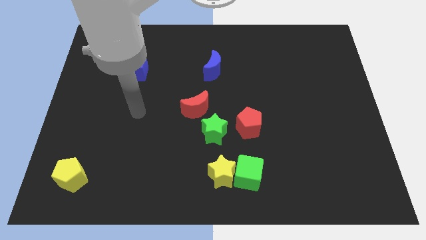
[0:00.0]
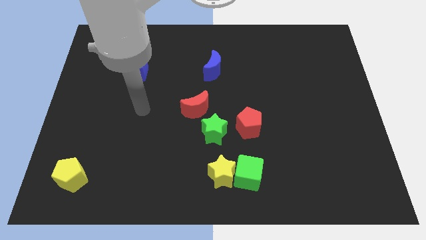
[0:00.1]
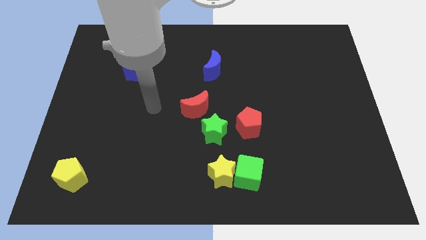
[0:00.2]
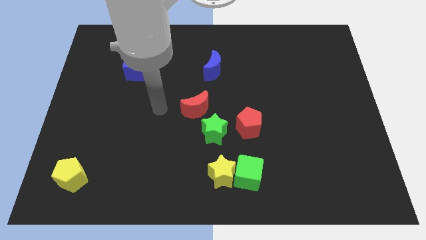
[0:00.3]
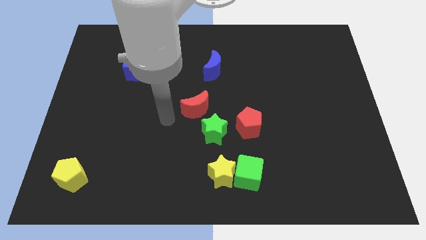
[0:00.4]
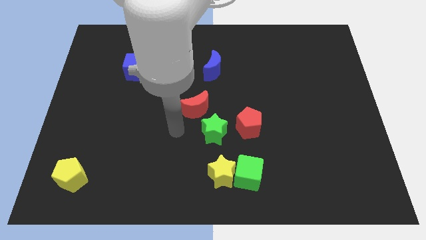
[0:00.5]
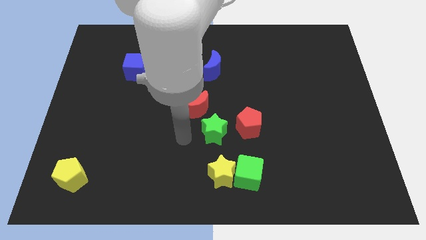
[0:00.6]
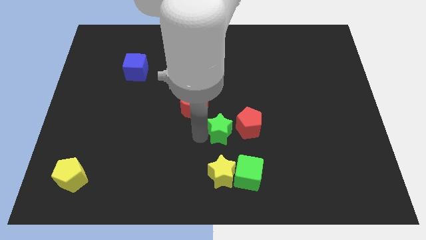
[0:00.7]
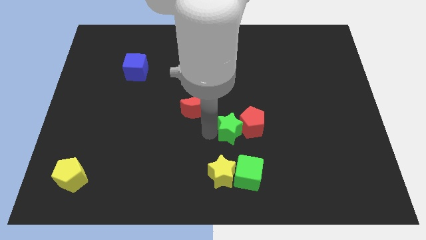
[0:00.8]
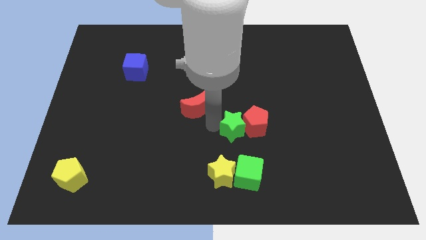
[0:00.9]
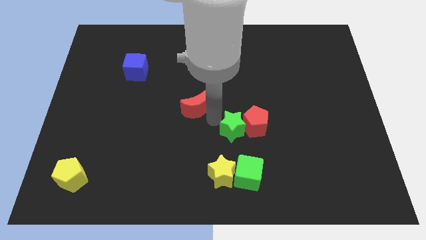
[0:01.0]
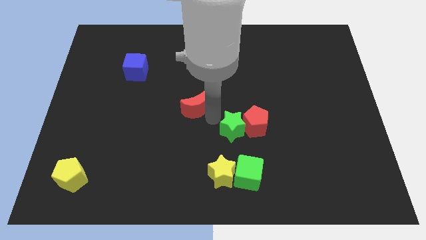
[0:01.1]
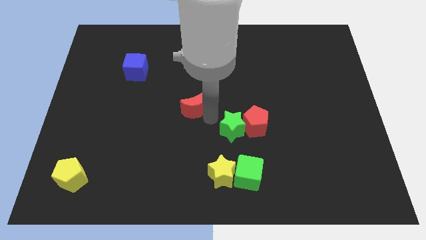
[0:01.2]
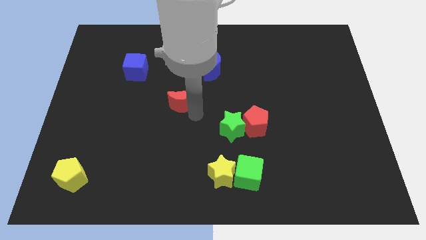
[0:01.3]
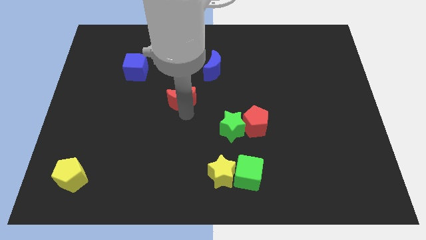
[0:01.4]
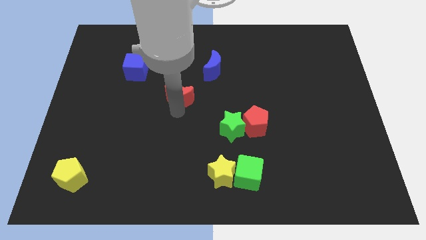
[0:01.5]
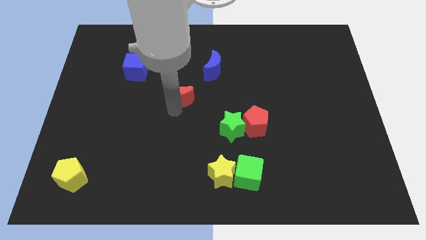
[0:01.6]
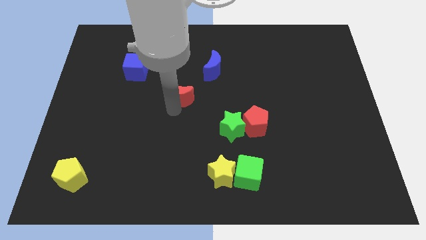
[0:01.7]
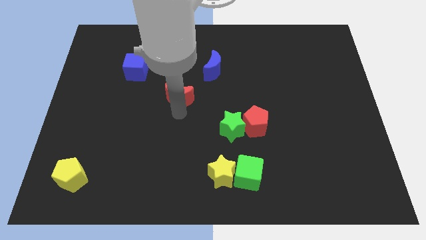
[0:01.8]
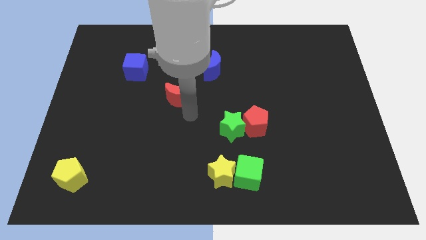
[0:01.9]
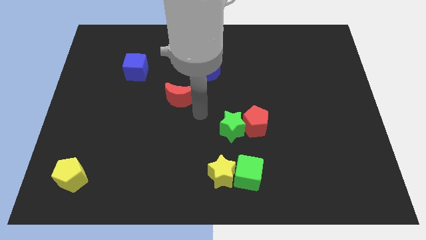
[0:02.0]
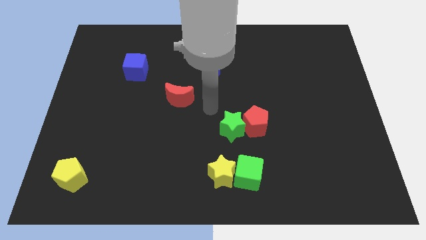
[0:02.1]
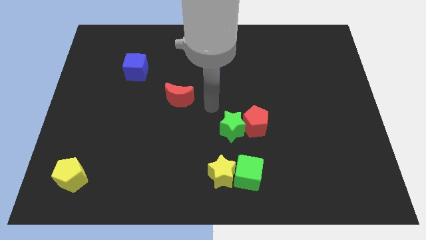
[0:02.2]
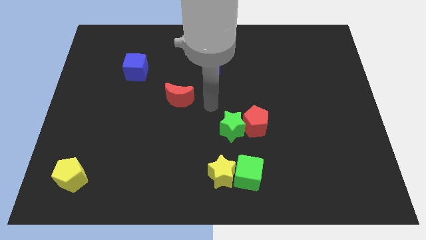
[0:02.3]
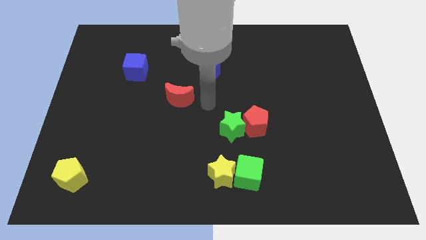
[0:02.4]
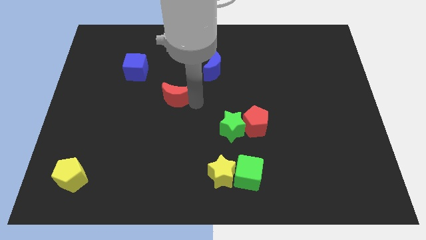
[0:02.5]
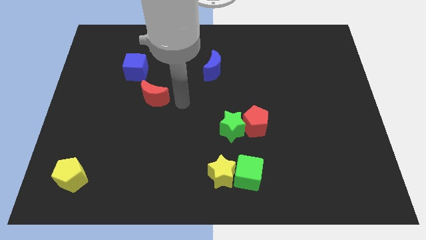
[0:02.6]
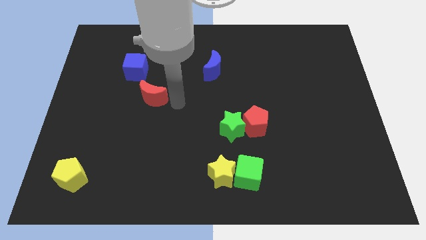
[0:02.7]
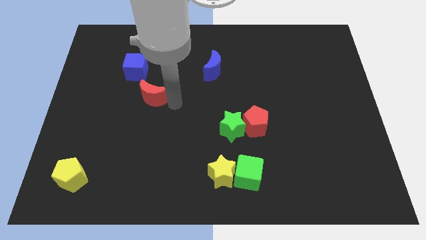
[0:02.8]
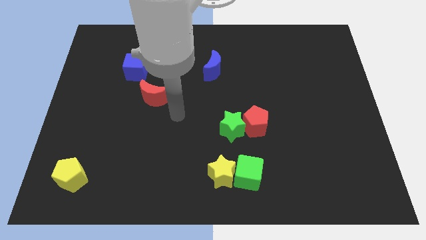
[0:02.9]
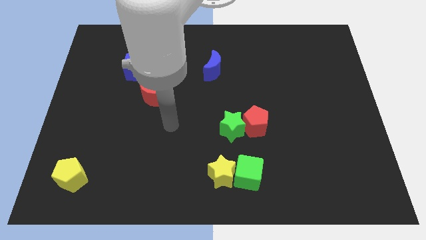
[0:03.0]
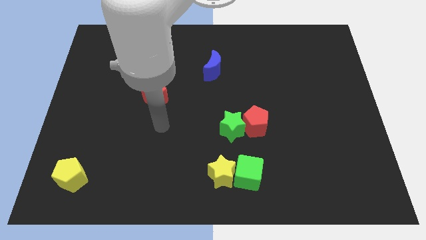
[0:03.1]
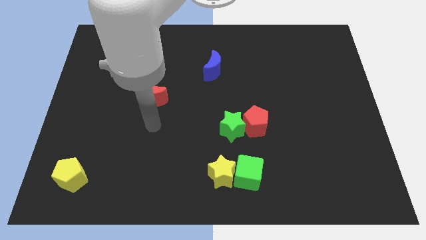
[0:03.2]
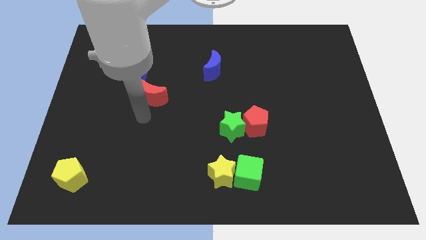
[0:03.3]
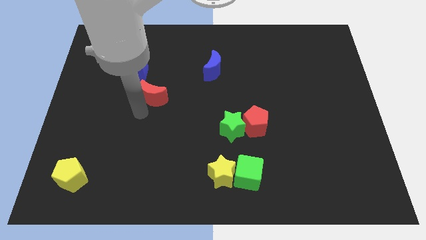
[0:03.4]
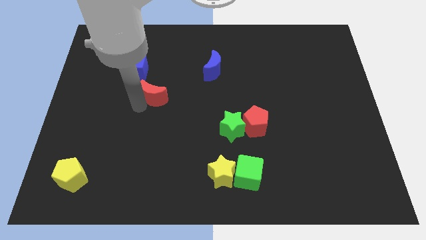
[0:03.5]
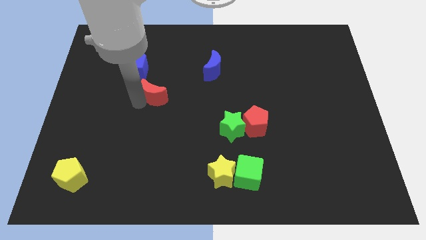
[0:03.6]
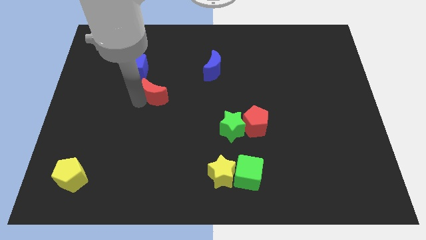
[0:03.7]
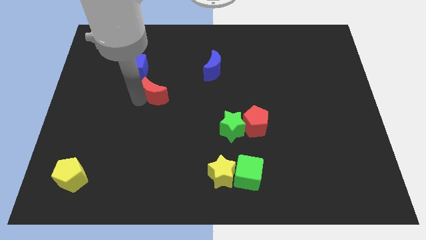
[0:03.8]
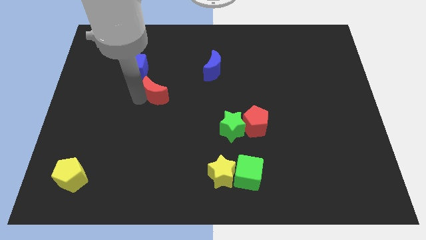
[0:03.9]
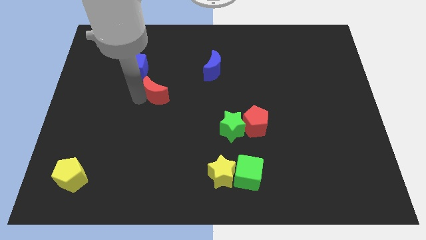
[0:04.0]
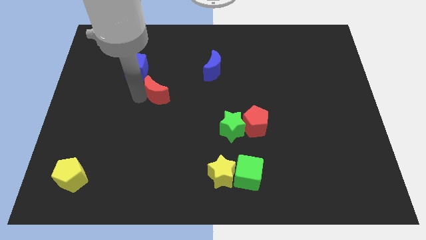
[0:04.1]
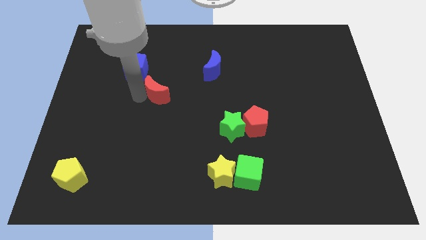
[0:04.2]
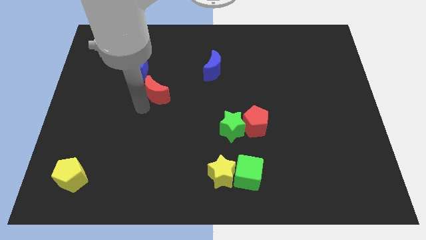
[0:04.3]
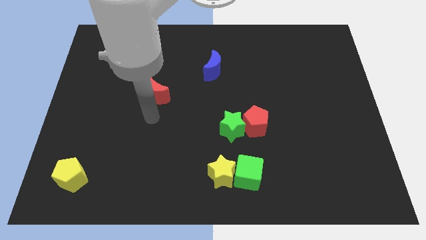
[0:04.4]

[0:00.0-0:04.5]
place the red moon diagonally below the bottom right side of the blue cube

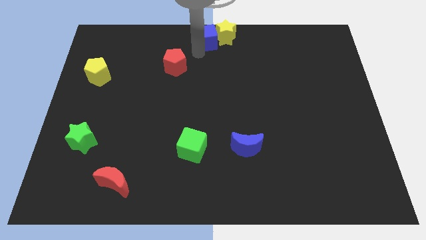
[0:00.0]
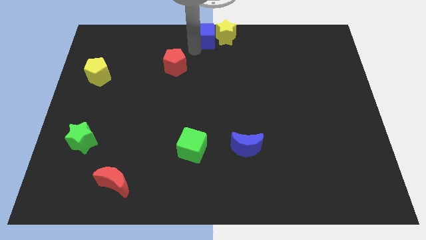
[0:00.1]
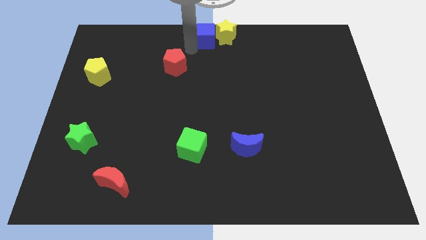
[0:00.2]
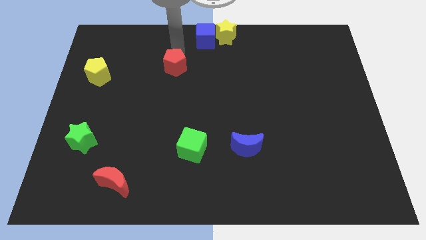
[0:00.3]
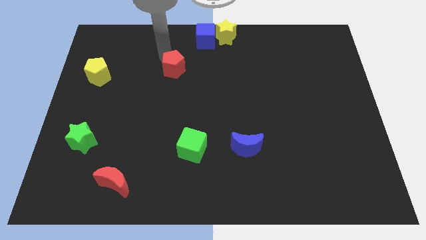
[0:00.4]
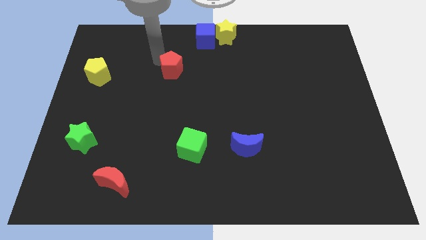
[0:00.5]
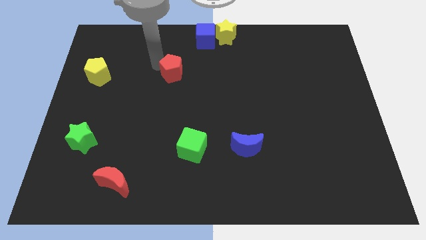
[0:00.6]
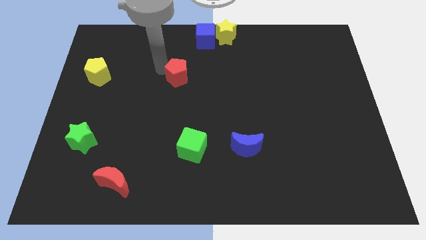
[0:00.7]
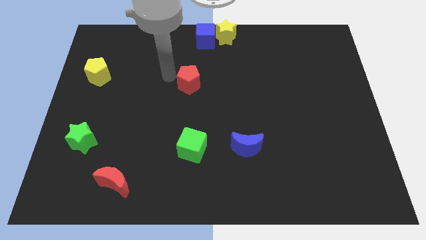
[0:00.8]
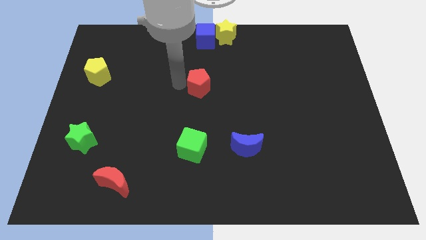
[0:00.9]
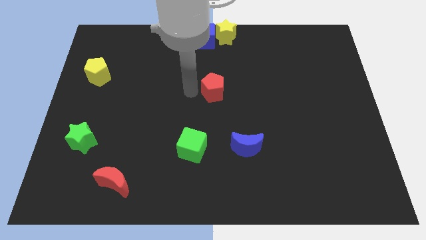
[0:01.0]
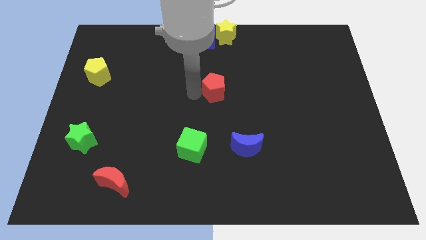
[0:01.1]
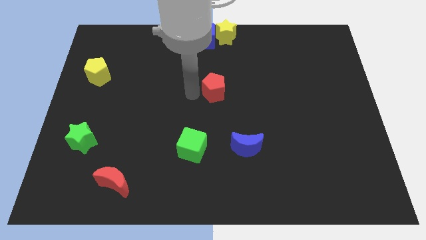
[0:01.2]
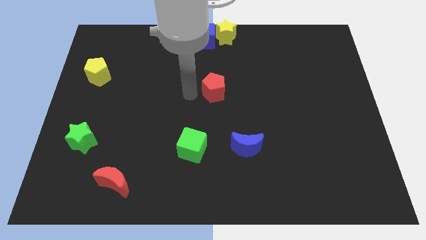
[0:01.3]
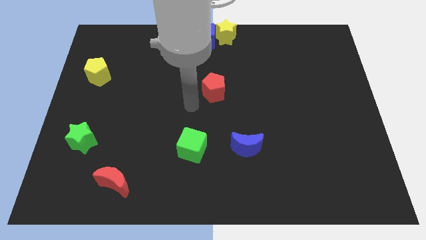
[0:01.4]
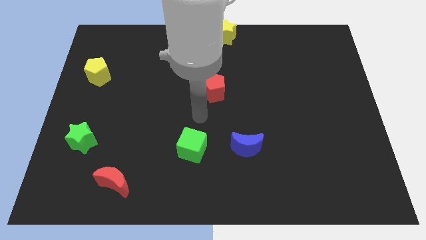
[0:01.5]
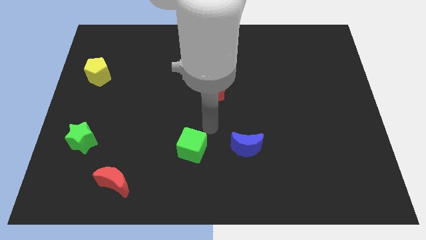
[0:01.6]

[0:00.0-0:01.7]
place the red pentagon to the center of the board

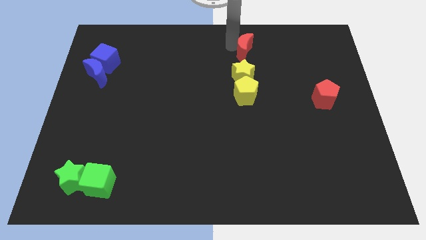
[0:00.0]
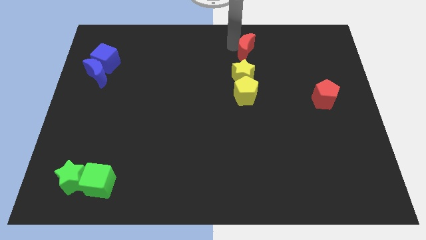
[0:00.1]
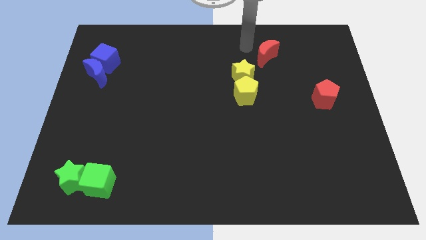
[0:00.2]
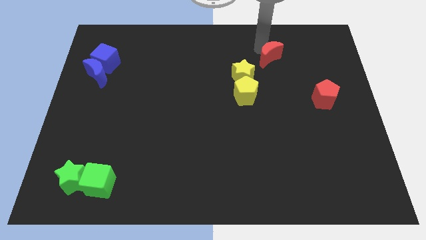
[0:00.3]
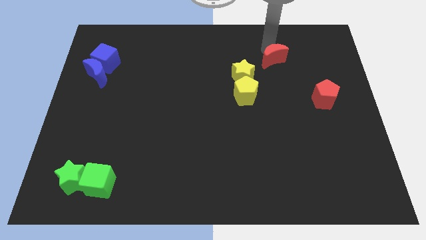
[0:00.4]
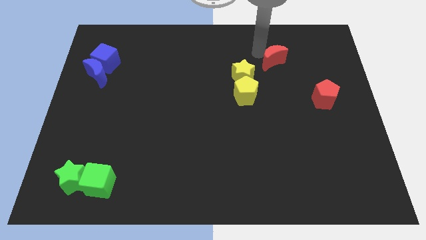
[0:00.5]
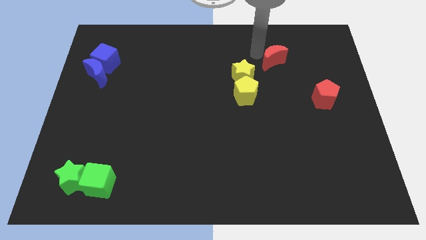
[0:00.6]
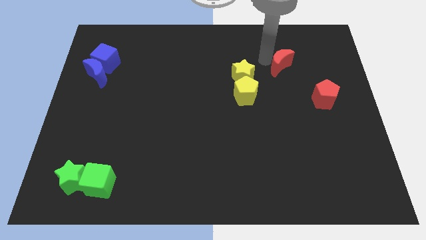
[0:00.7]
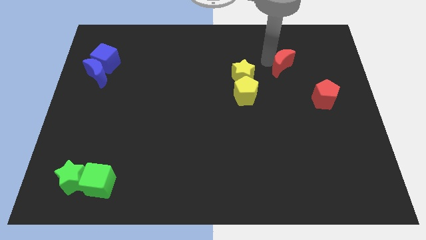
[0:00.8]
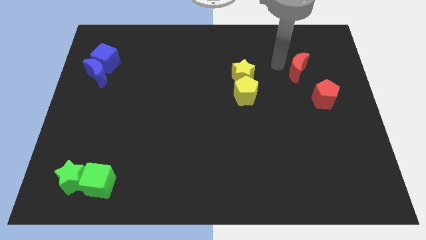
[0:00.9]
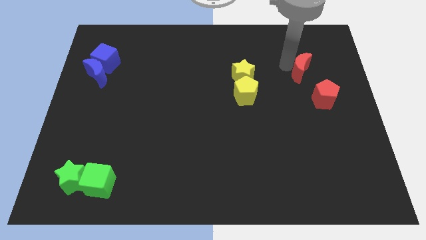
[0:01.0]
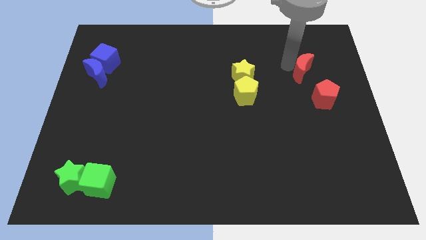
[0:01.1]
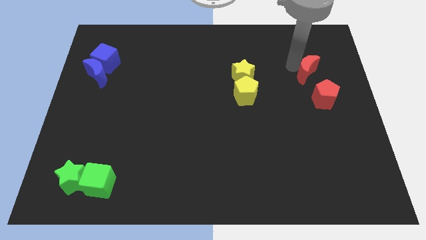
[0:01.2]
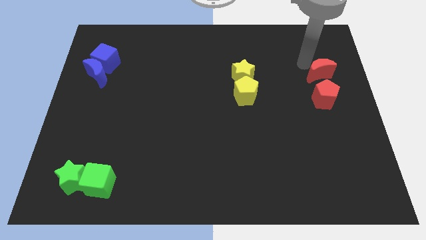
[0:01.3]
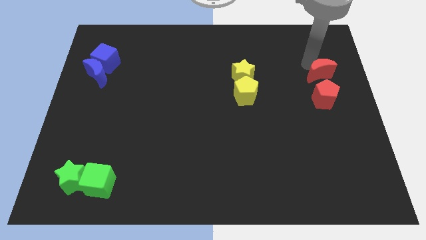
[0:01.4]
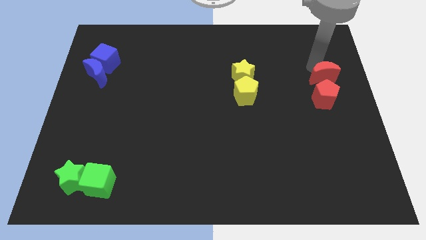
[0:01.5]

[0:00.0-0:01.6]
move the red moon above the red pentagon

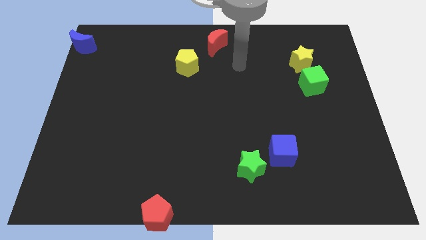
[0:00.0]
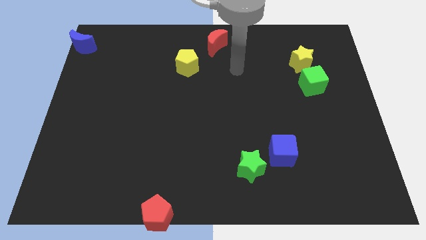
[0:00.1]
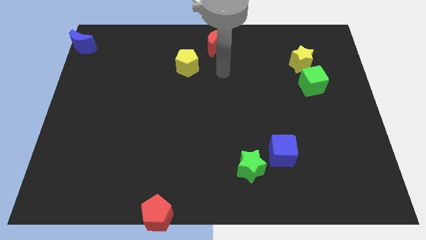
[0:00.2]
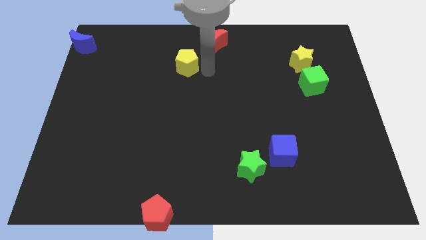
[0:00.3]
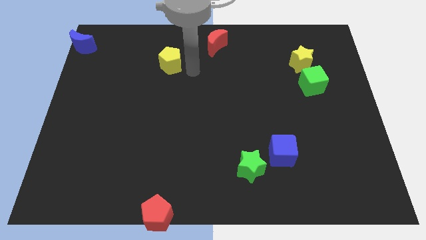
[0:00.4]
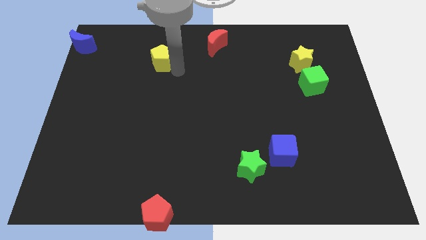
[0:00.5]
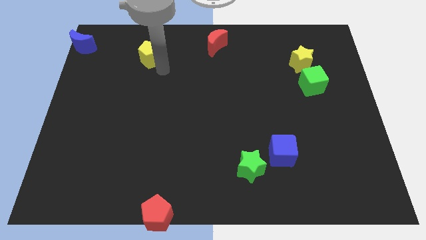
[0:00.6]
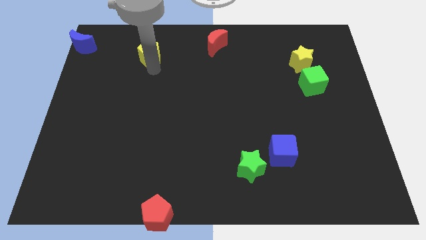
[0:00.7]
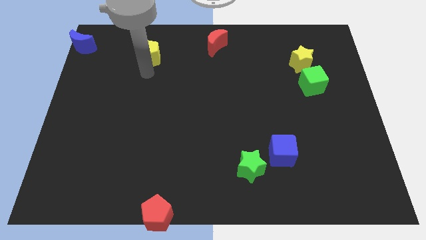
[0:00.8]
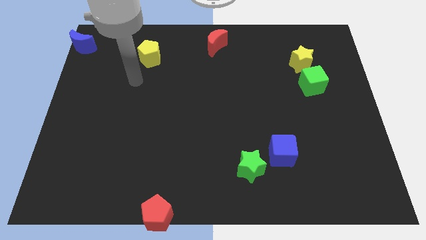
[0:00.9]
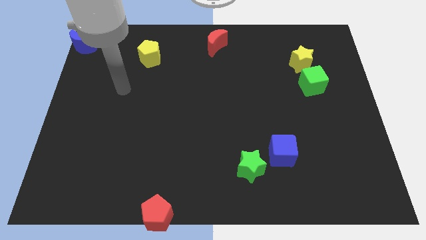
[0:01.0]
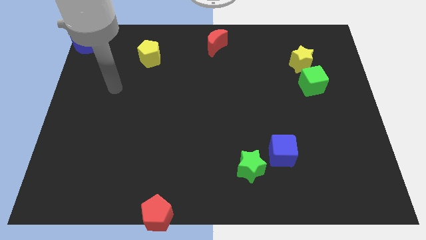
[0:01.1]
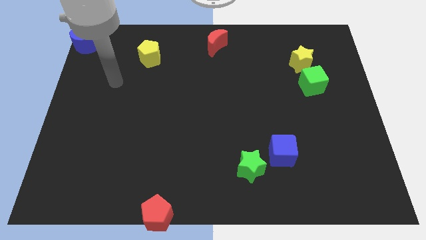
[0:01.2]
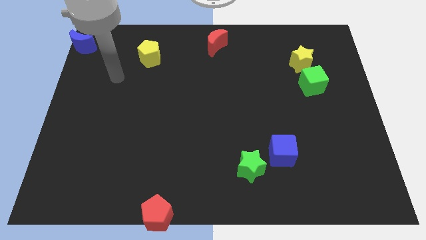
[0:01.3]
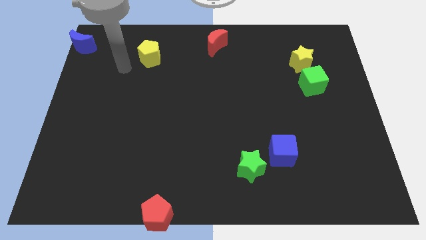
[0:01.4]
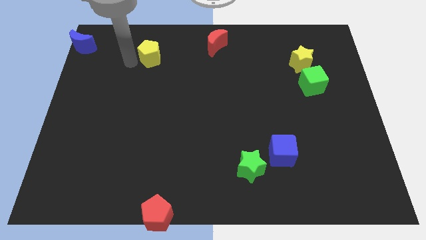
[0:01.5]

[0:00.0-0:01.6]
push the red moon to the top center of the board
